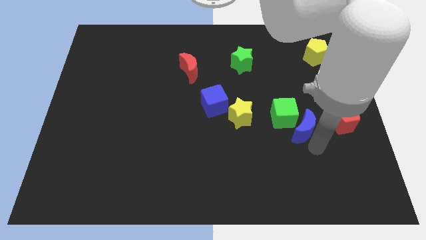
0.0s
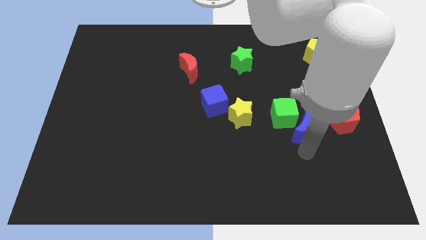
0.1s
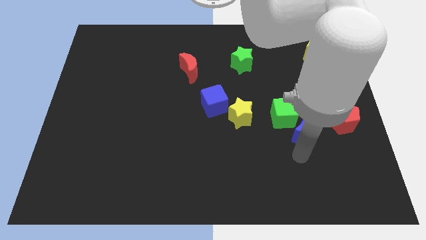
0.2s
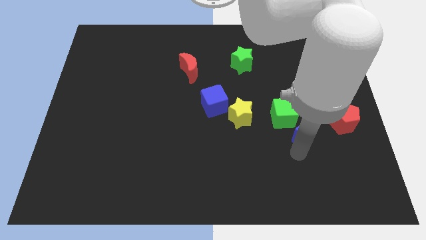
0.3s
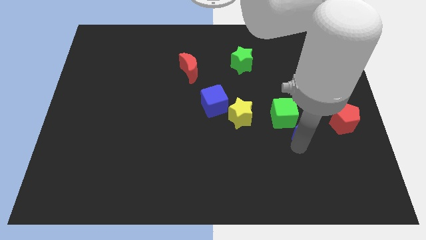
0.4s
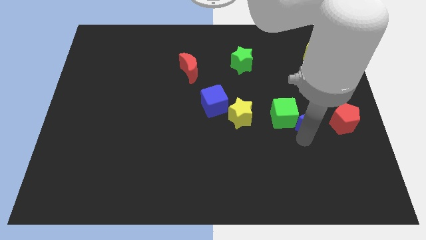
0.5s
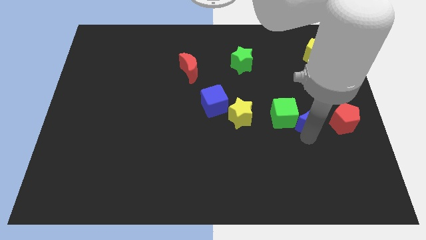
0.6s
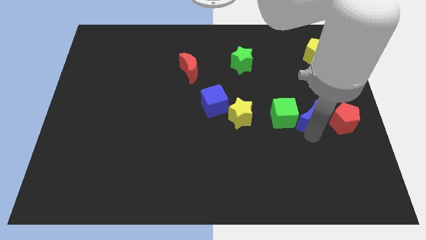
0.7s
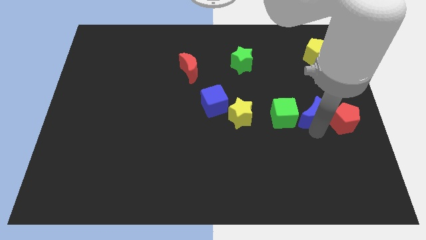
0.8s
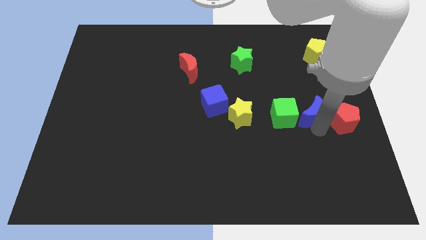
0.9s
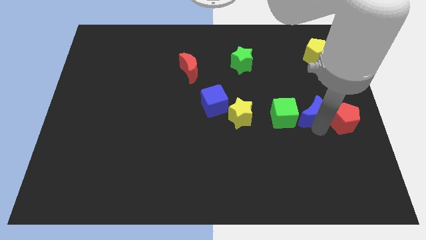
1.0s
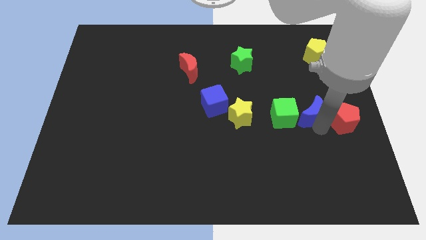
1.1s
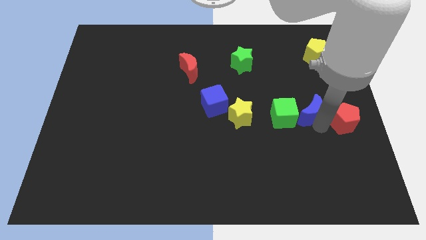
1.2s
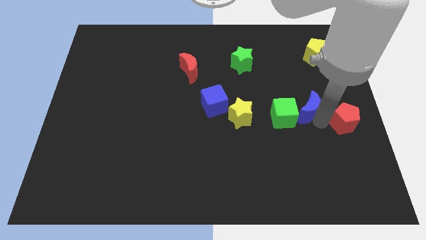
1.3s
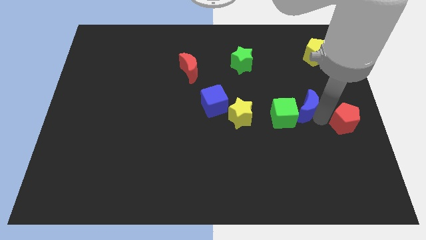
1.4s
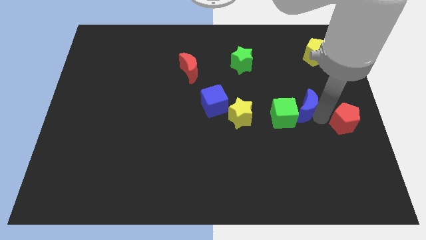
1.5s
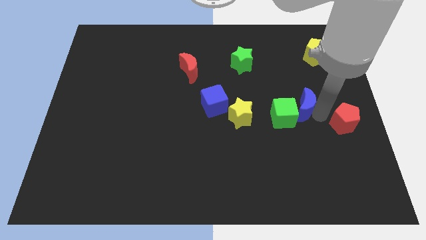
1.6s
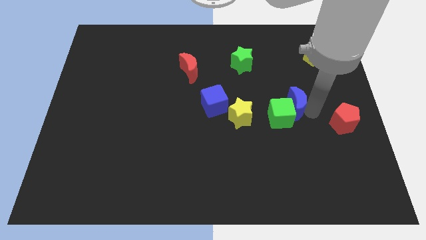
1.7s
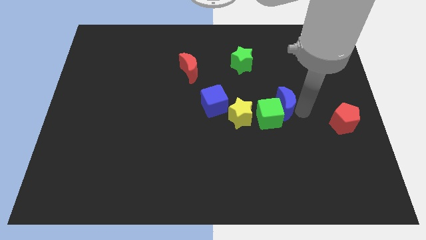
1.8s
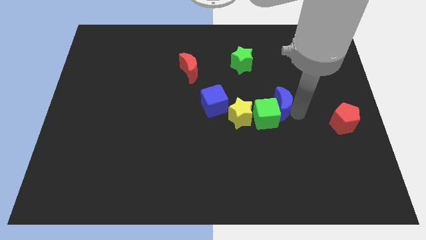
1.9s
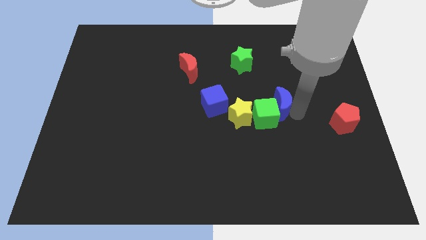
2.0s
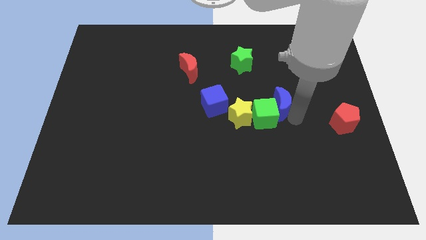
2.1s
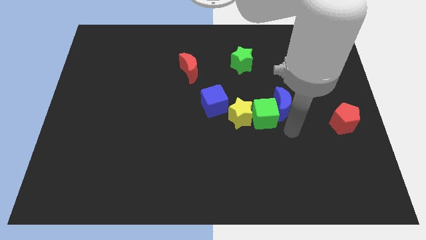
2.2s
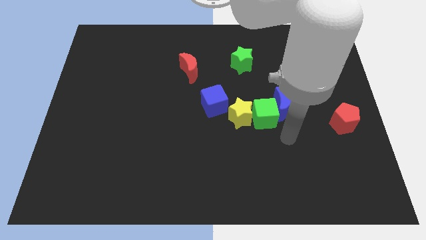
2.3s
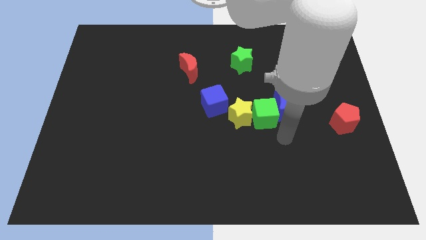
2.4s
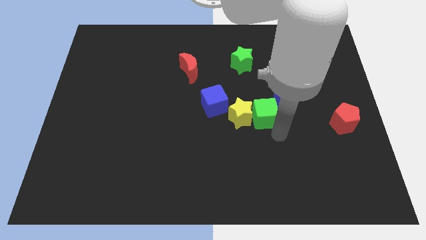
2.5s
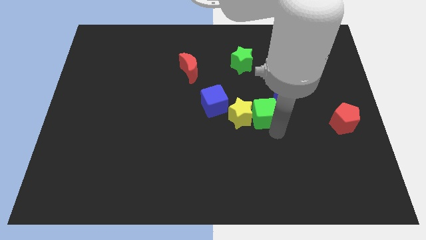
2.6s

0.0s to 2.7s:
place the arm down to the green cube

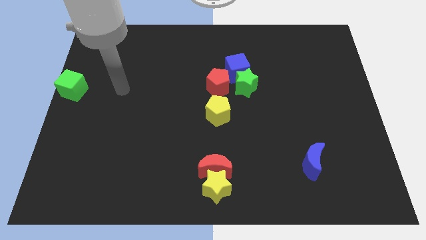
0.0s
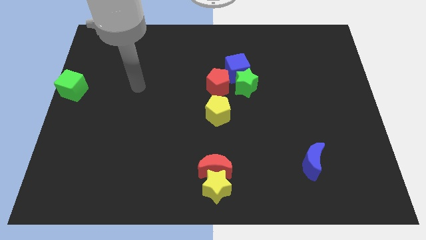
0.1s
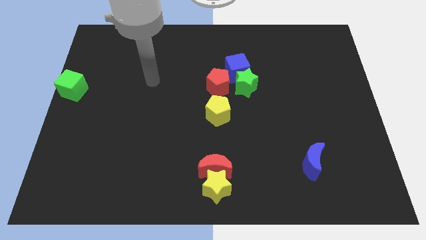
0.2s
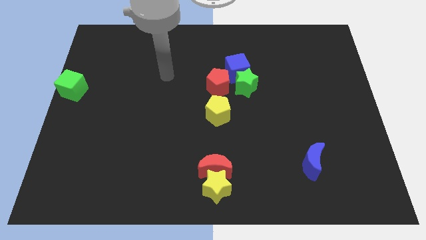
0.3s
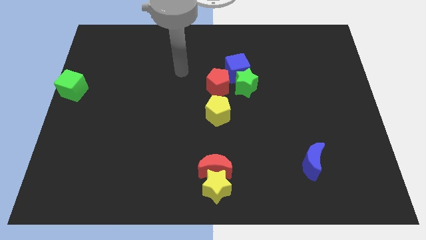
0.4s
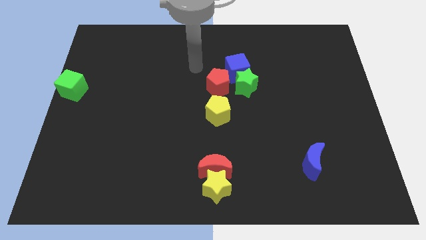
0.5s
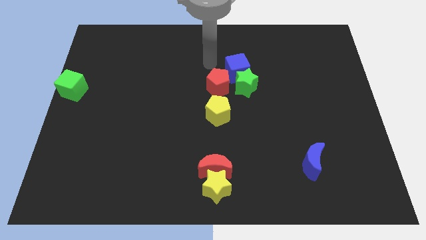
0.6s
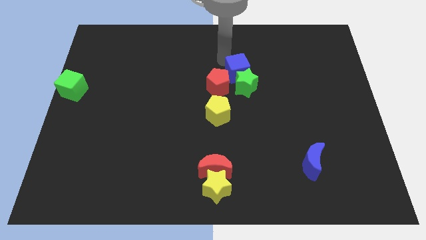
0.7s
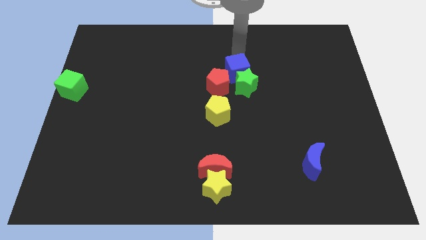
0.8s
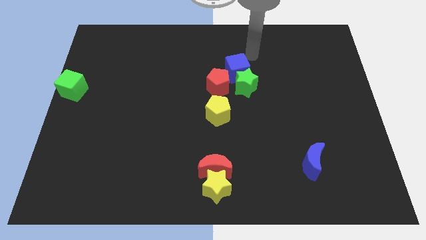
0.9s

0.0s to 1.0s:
move your arm to the top of blue cube

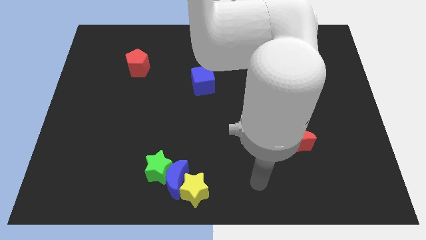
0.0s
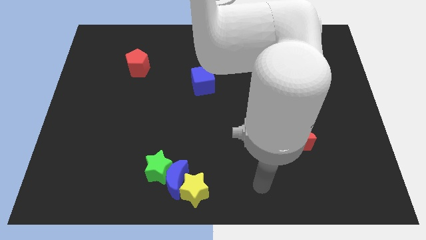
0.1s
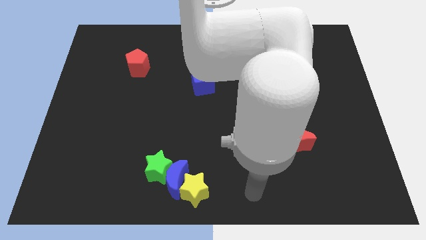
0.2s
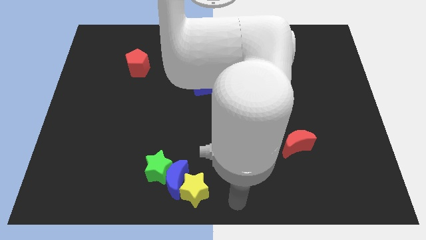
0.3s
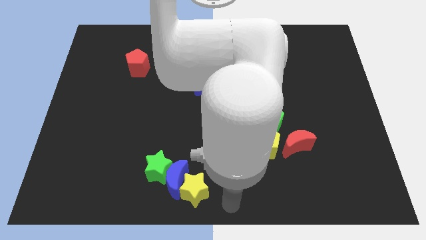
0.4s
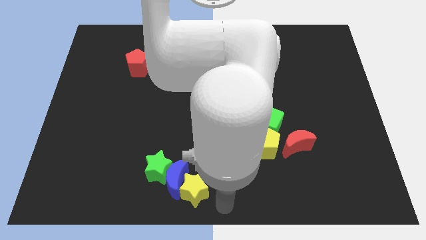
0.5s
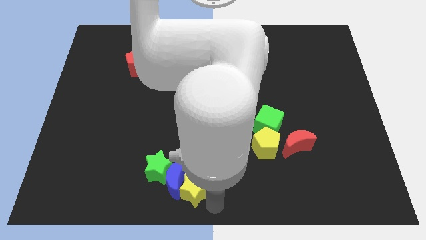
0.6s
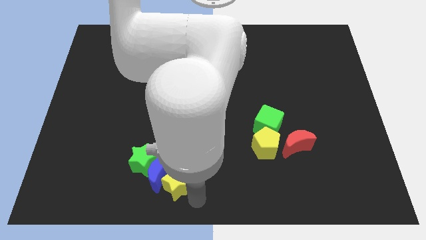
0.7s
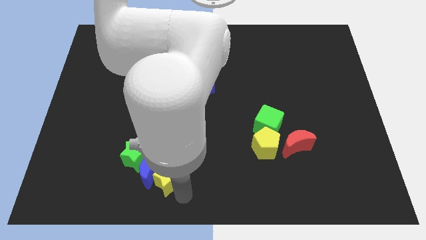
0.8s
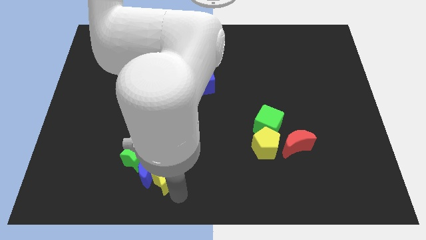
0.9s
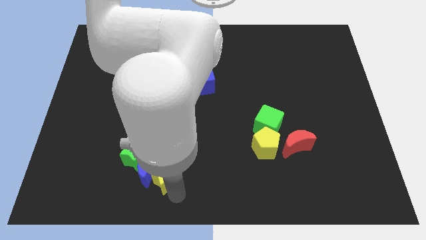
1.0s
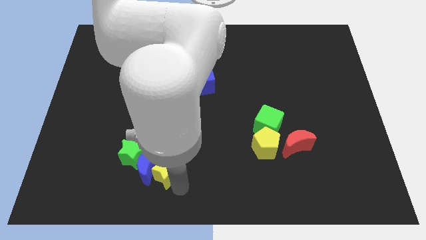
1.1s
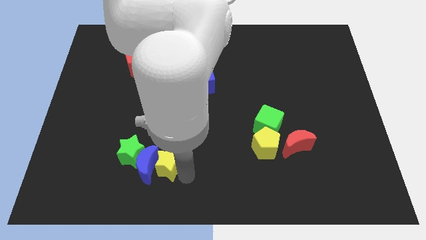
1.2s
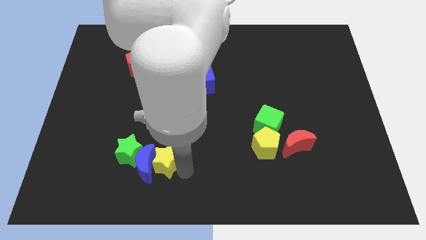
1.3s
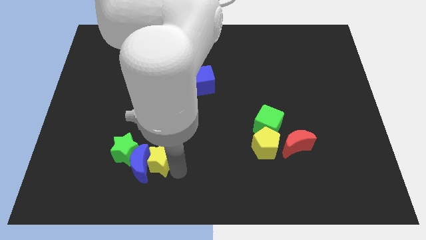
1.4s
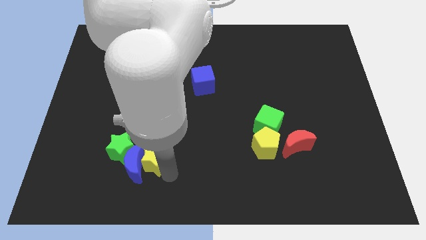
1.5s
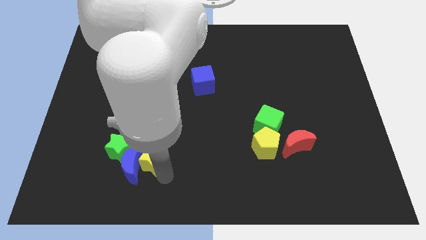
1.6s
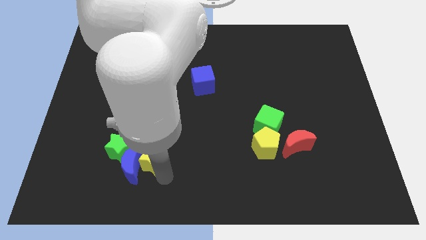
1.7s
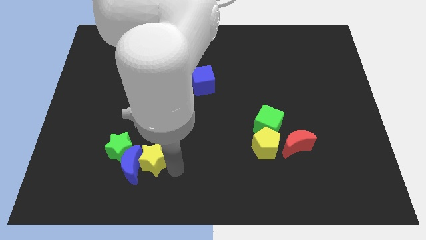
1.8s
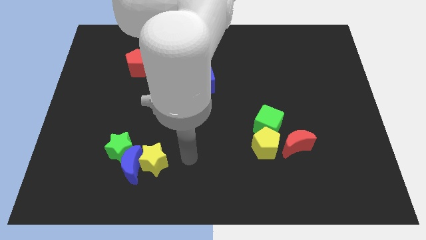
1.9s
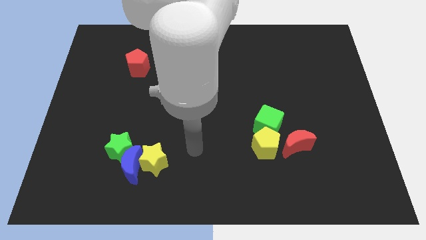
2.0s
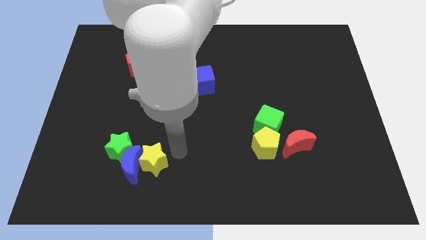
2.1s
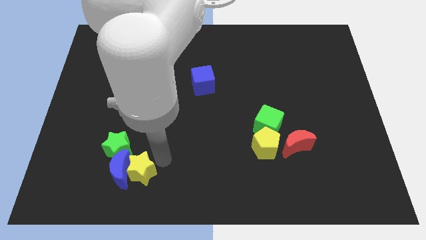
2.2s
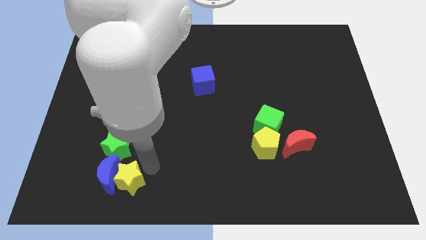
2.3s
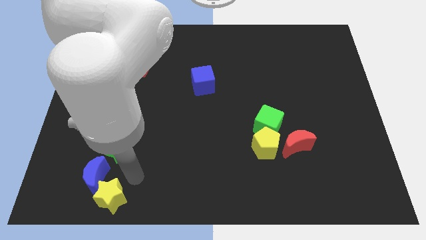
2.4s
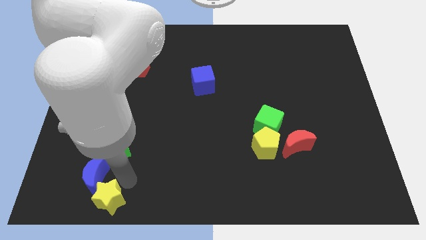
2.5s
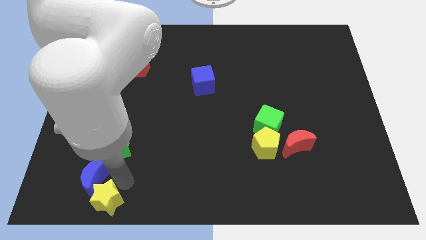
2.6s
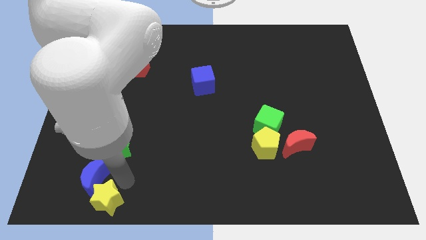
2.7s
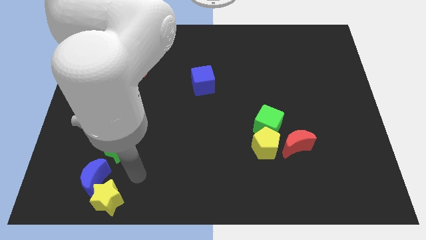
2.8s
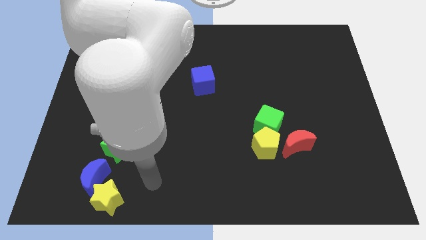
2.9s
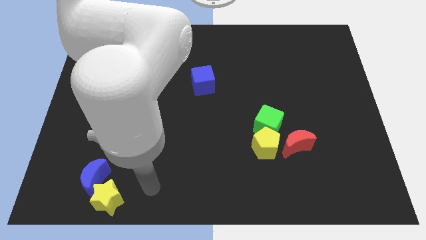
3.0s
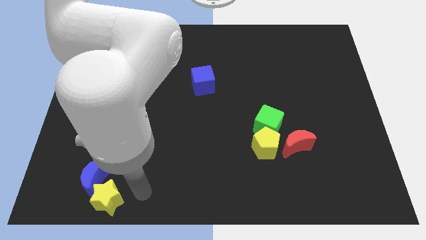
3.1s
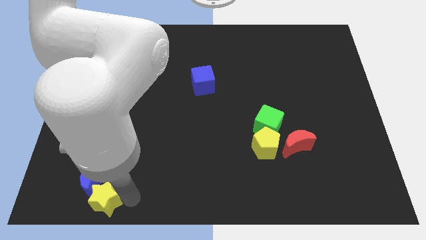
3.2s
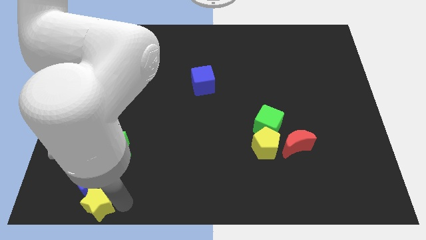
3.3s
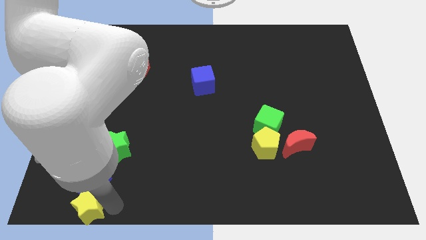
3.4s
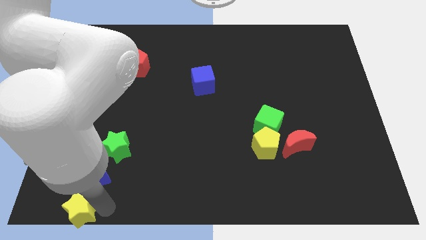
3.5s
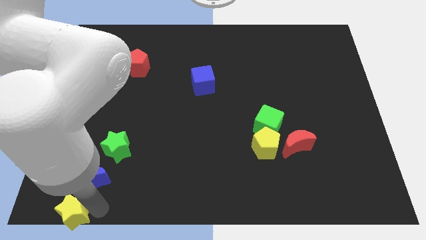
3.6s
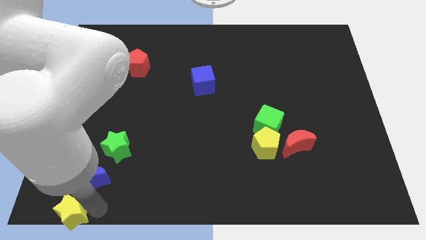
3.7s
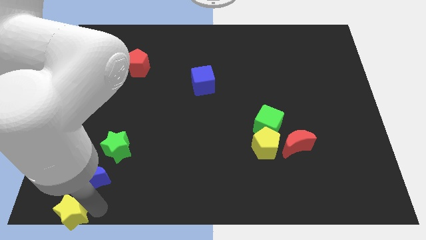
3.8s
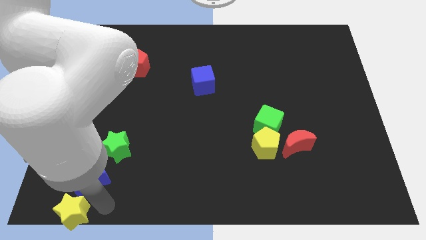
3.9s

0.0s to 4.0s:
drag the blue crescent and yellow star diagonally on the bottom left side of the green star

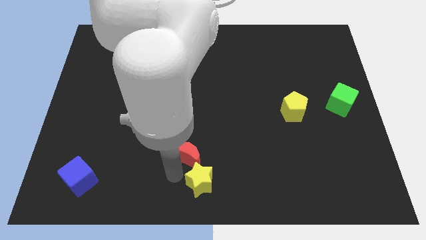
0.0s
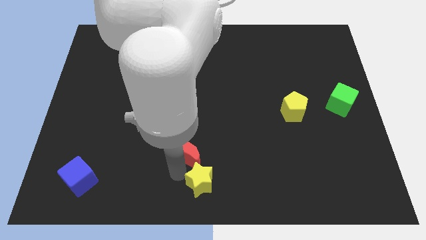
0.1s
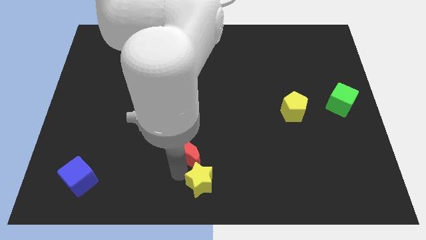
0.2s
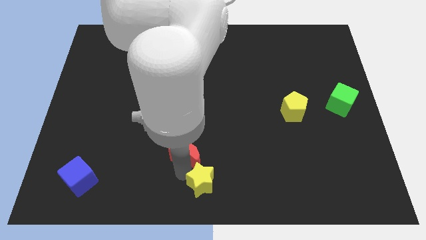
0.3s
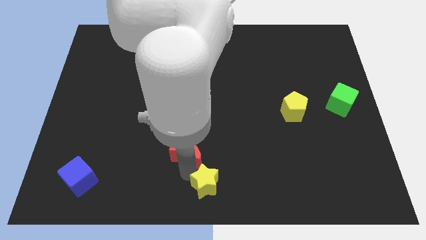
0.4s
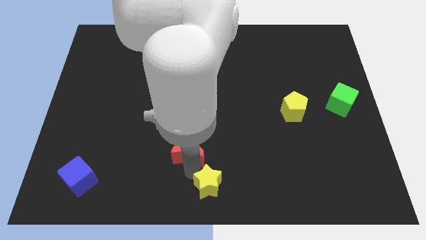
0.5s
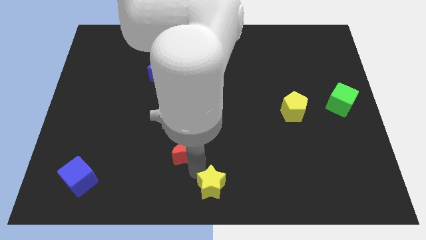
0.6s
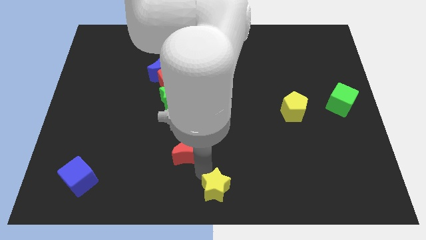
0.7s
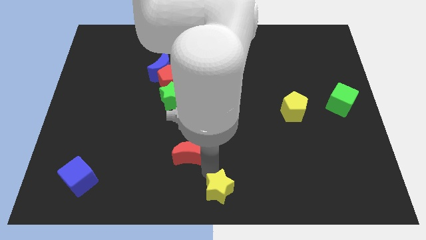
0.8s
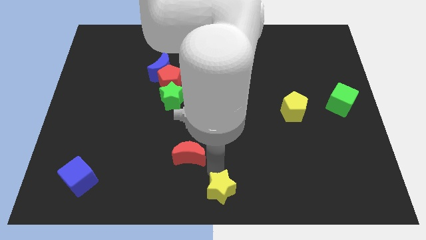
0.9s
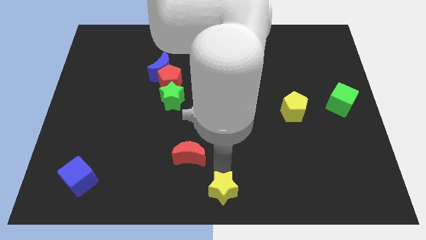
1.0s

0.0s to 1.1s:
separate yellow star from red moon

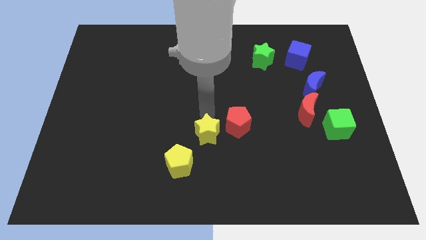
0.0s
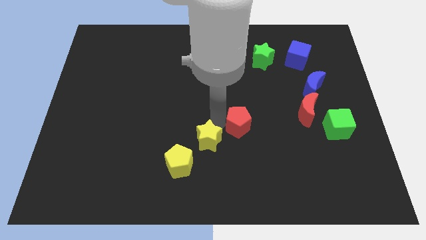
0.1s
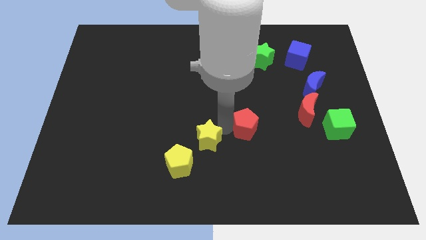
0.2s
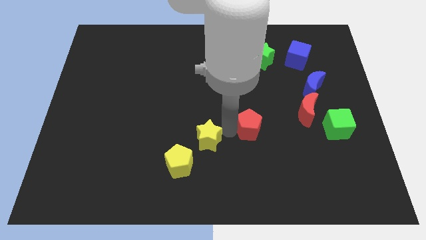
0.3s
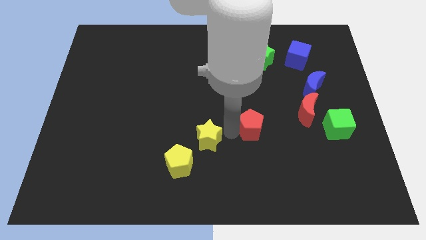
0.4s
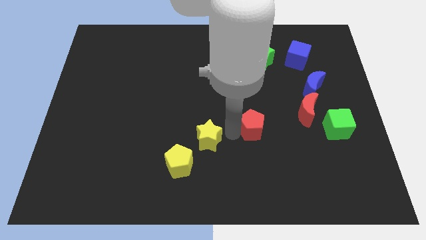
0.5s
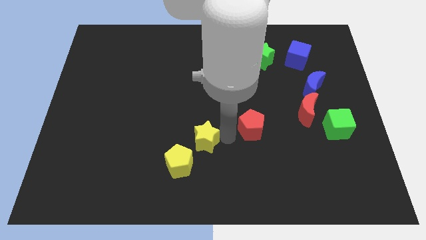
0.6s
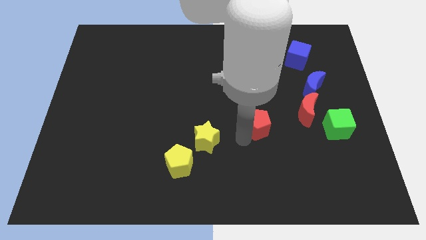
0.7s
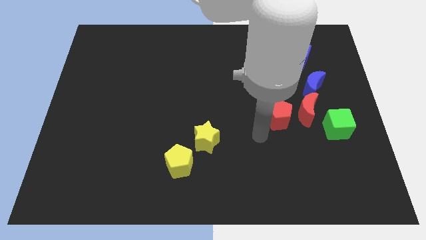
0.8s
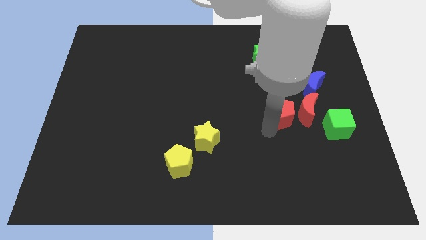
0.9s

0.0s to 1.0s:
move the red pentagon to the left of the red crescent
